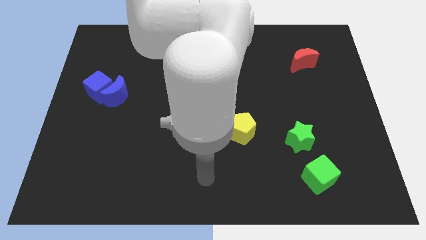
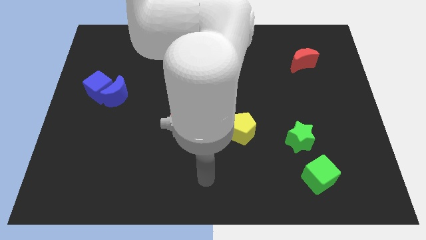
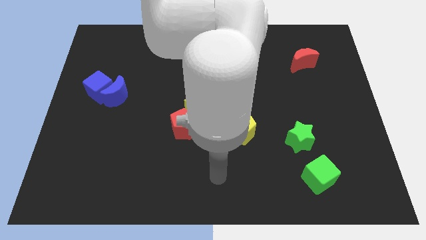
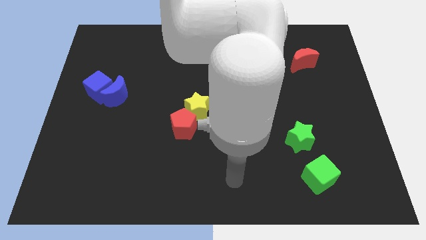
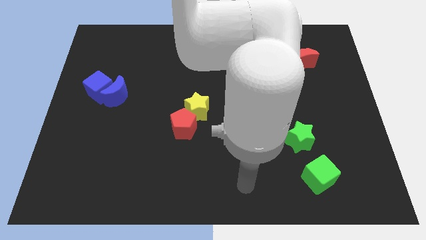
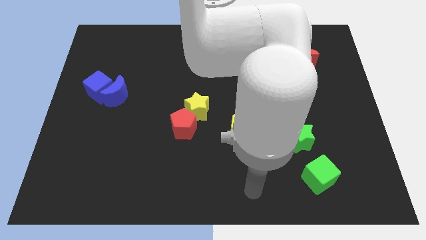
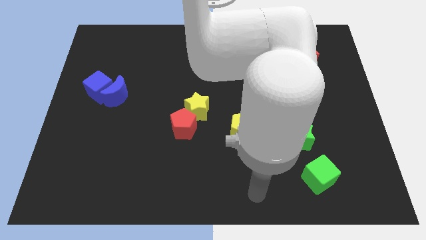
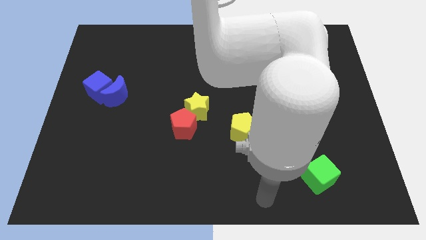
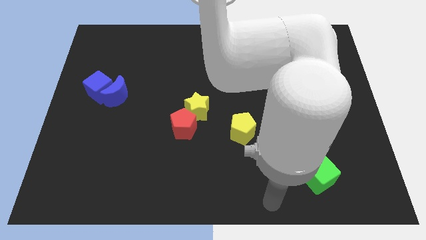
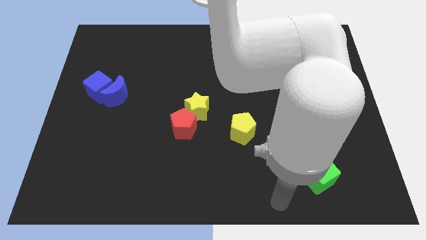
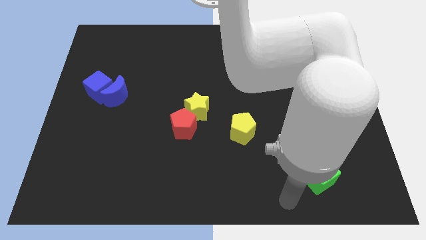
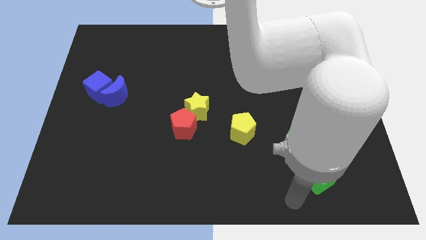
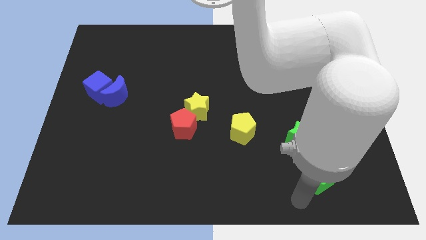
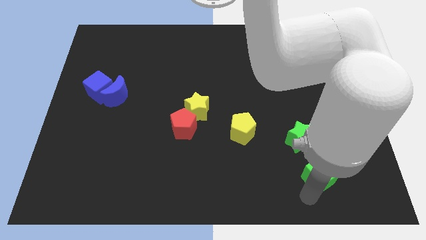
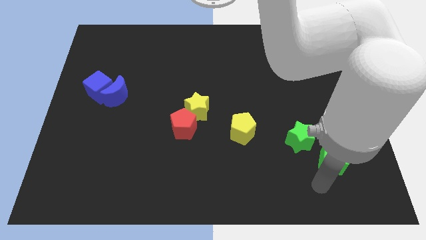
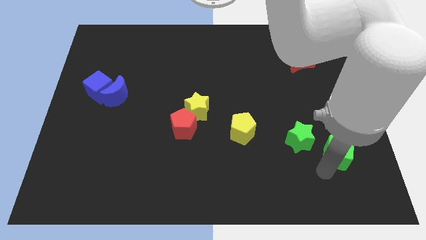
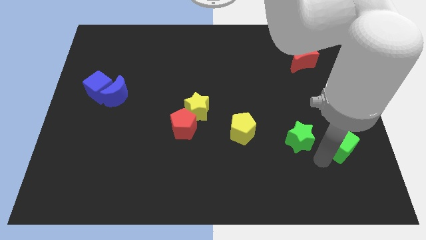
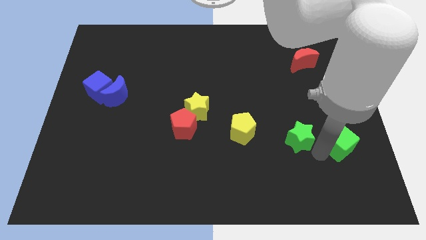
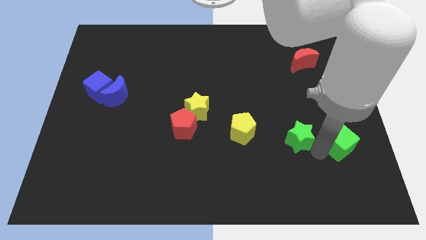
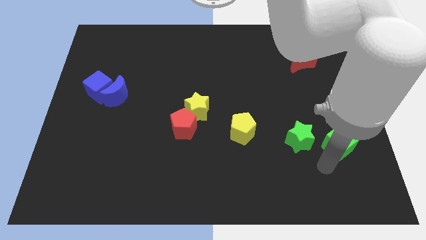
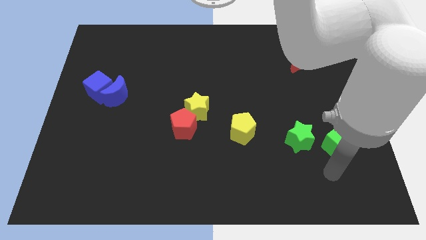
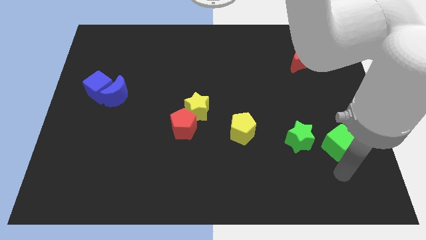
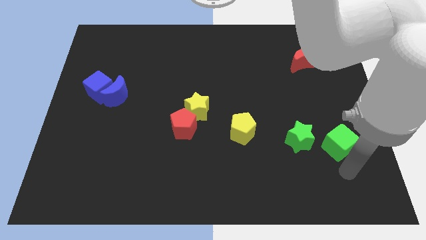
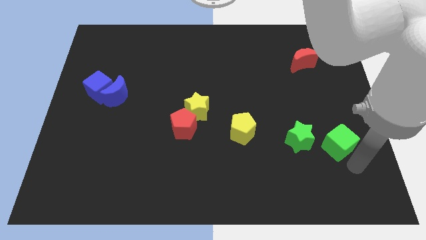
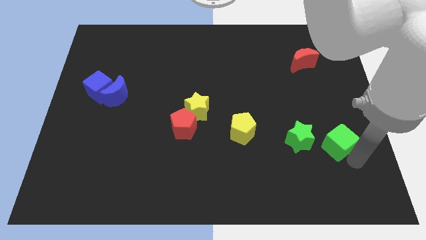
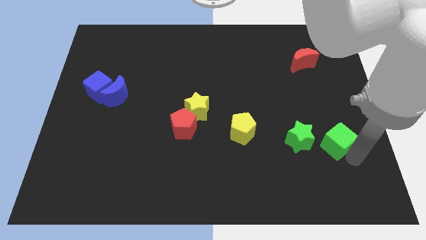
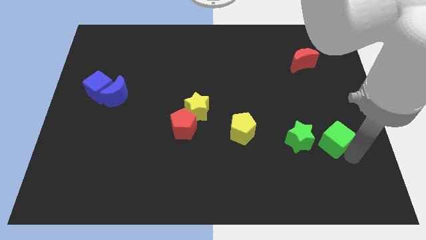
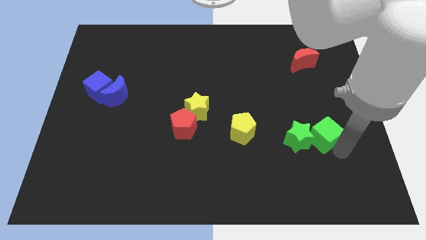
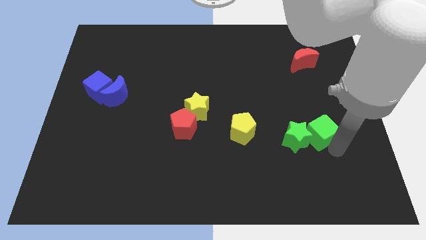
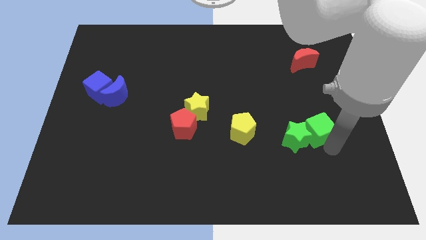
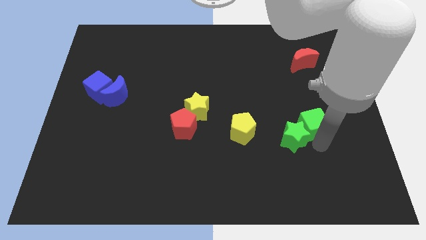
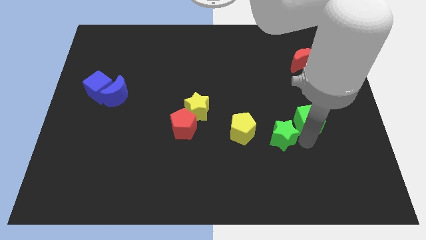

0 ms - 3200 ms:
move green cube into the green star

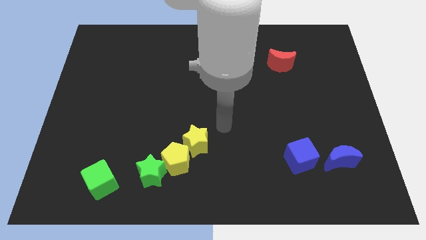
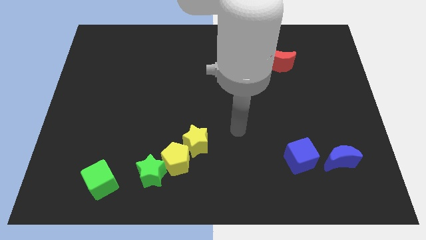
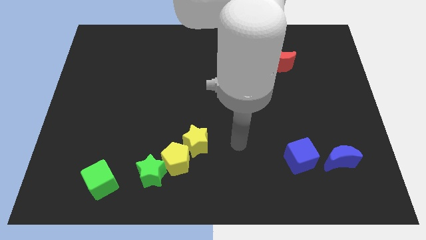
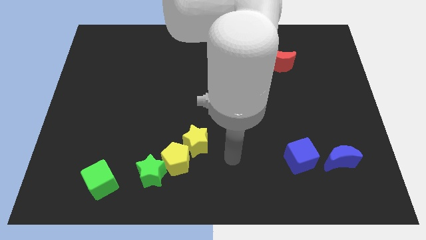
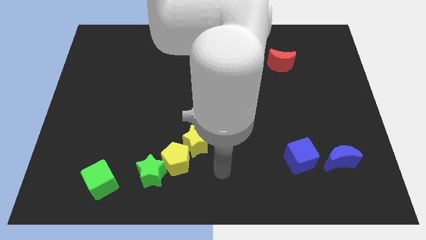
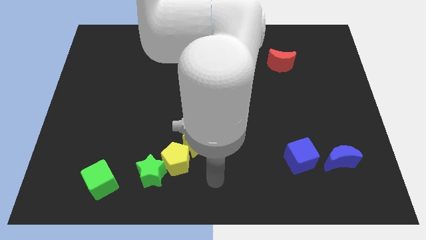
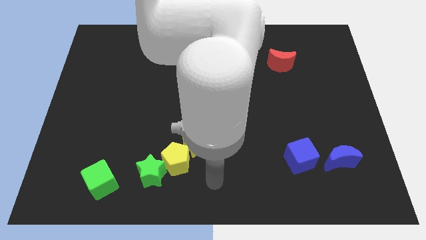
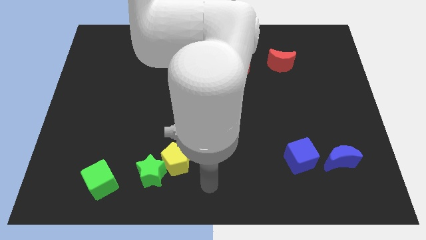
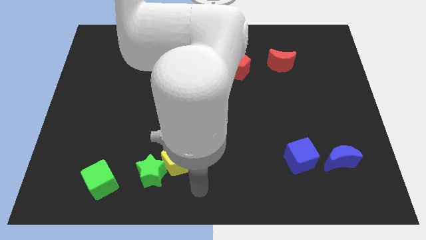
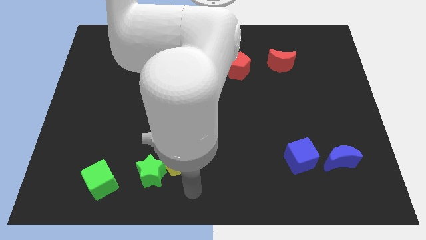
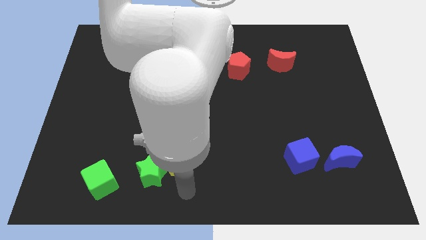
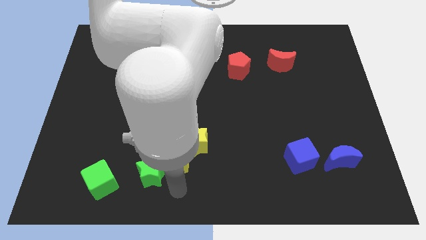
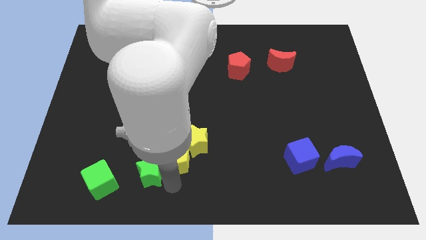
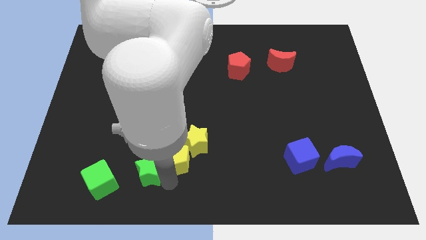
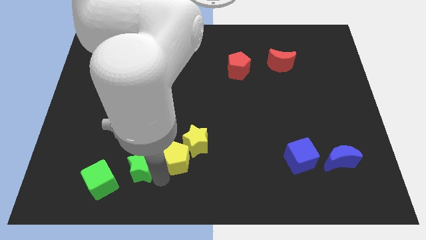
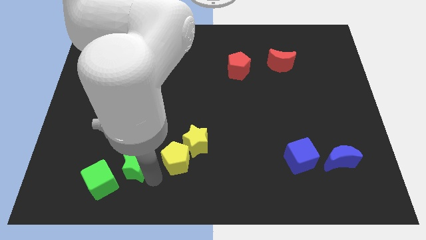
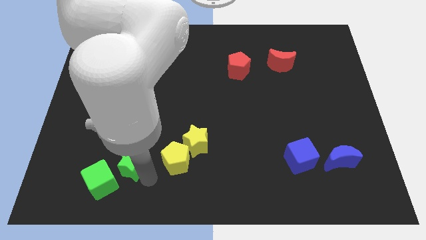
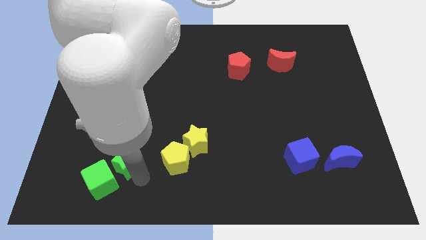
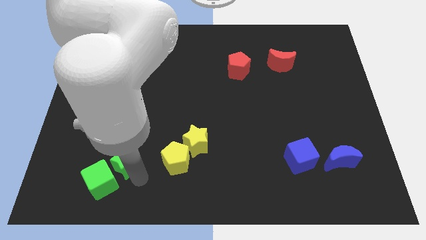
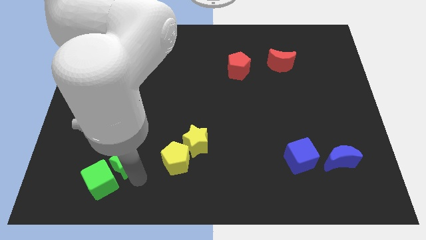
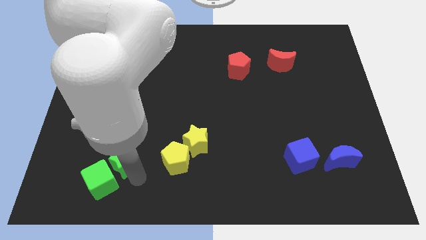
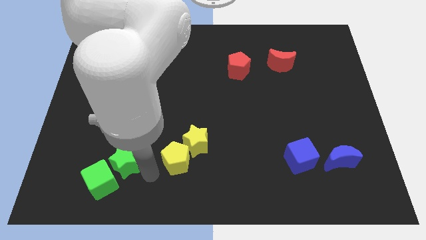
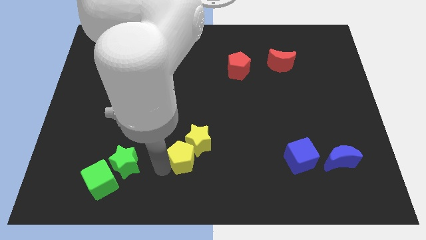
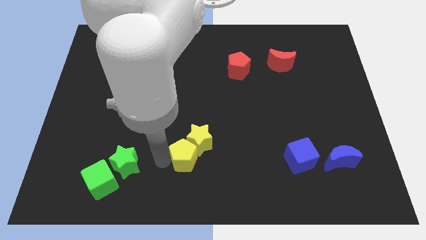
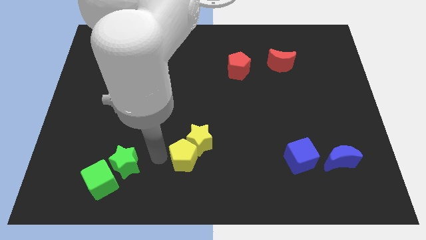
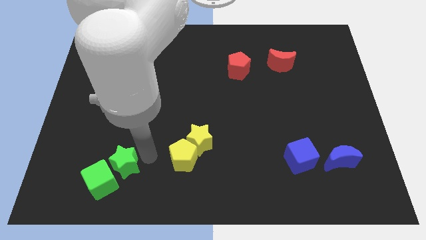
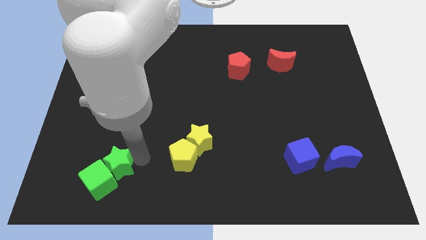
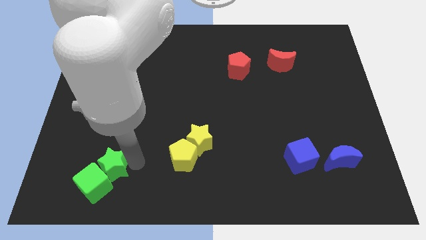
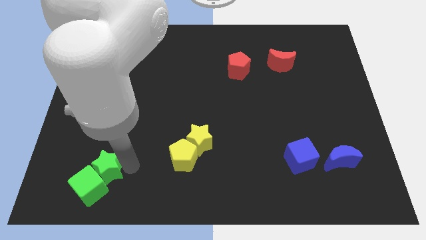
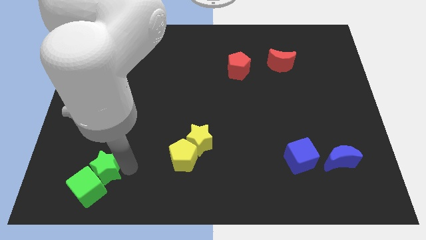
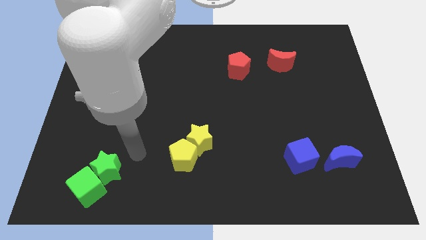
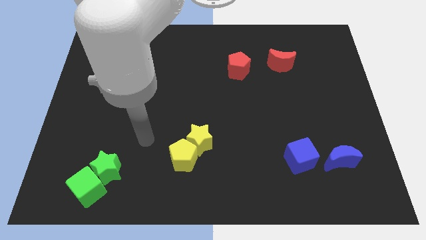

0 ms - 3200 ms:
drag both the green blocks slightly to the bottom left side of the board

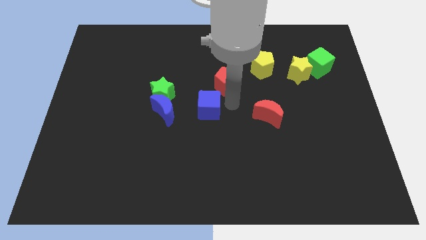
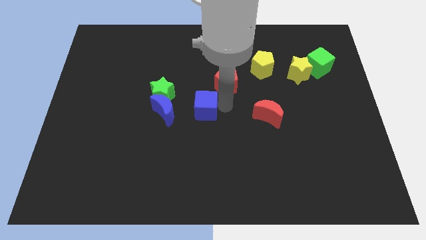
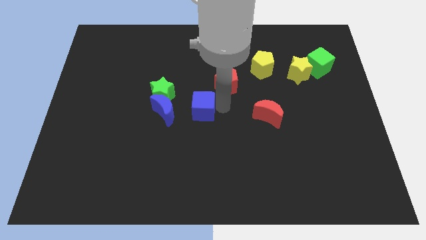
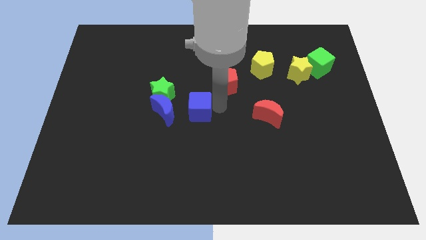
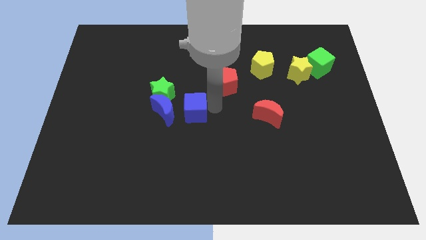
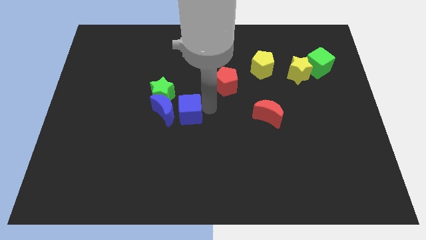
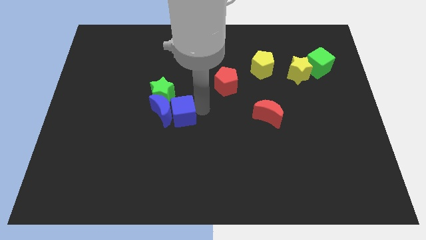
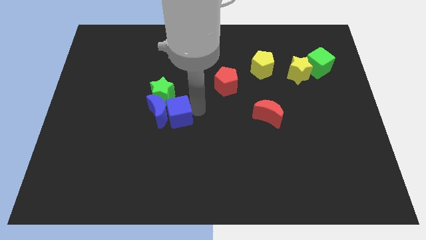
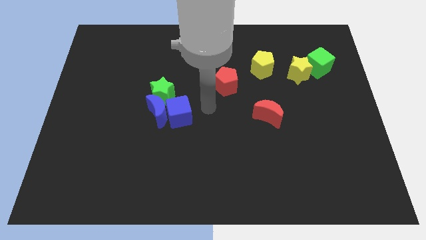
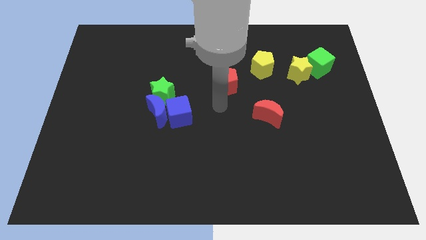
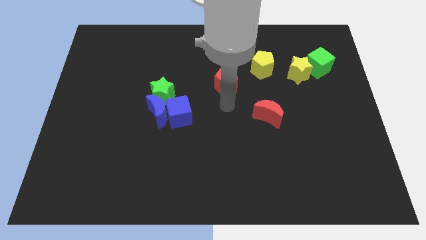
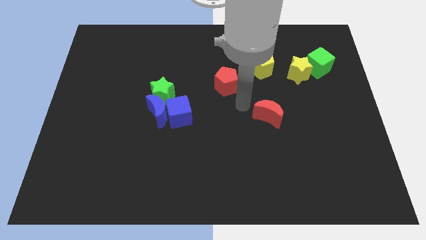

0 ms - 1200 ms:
push the blue cube into the blue moon

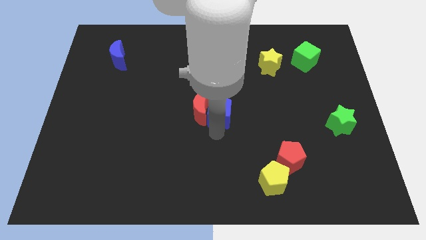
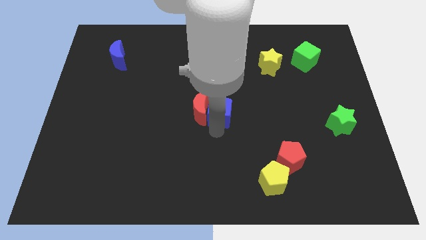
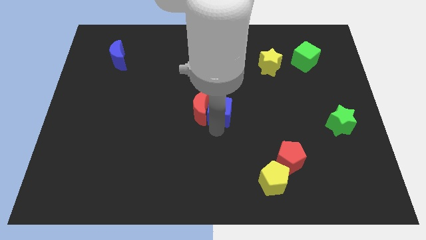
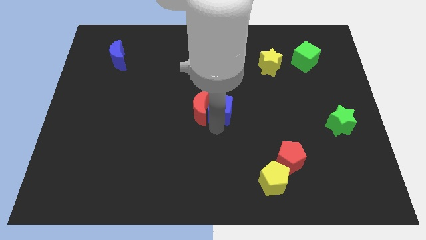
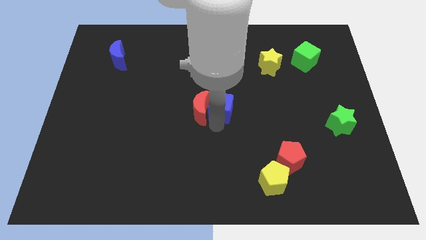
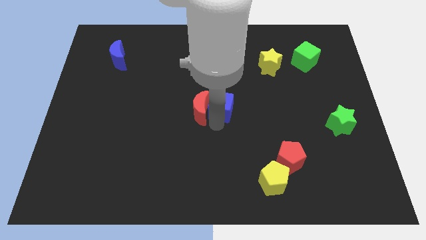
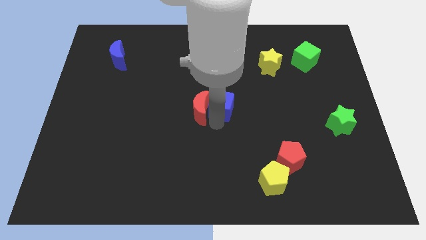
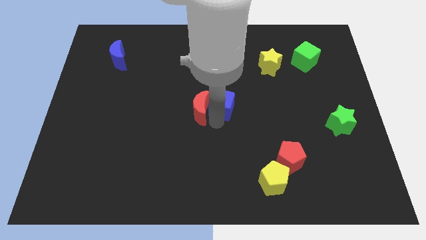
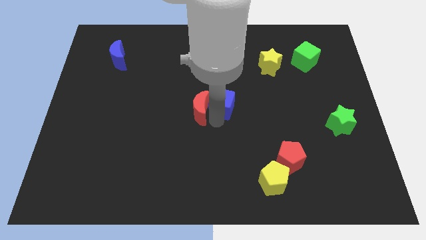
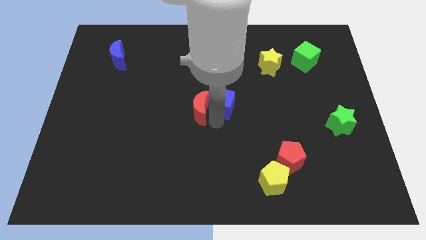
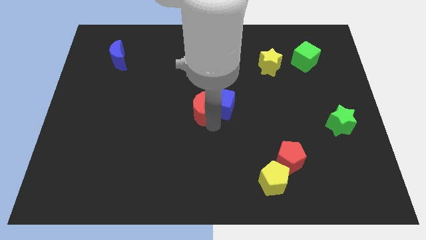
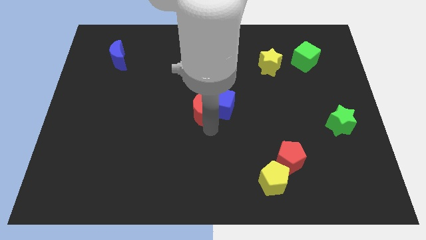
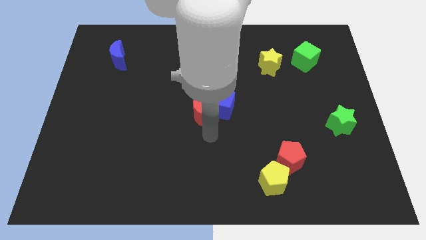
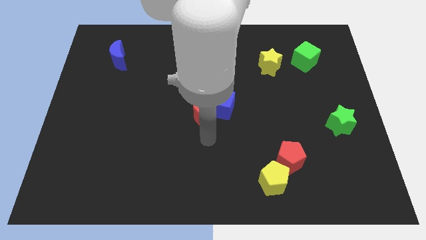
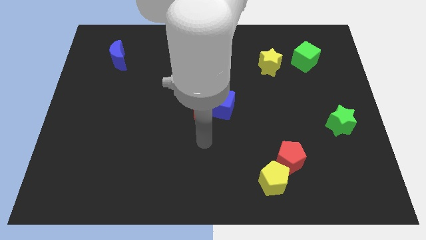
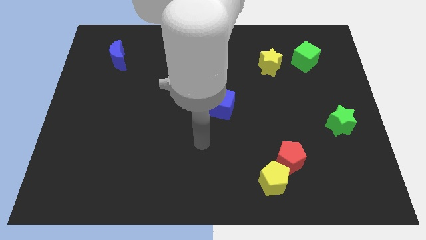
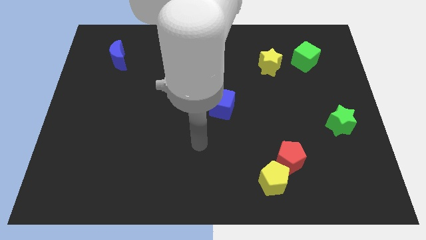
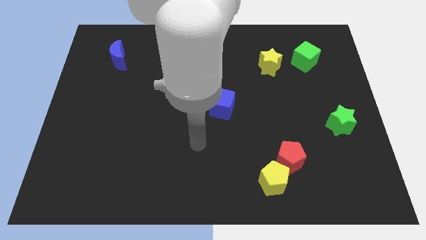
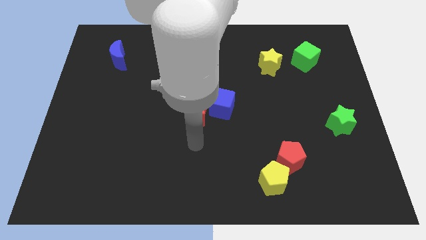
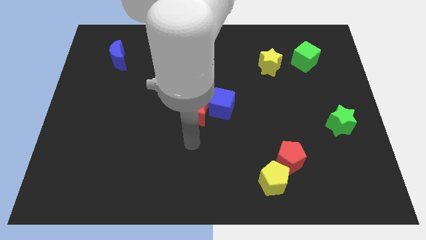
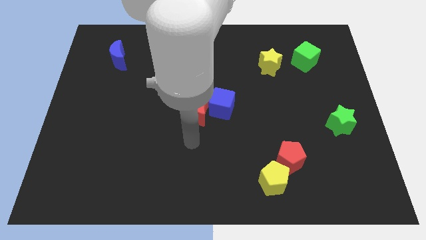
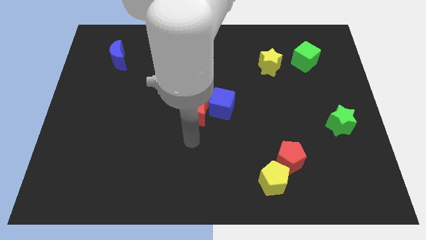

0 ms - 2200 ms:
move the blue cube slightly upwards
